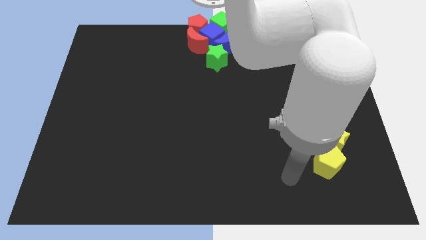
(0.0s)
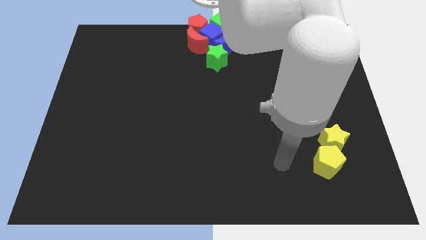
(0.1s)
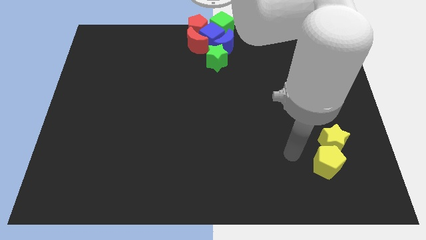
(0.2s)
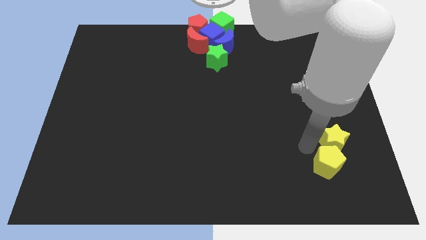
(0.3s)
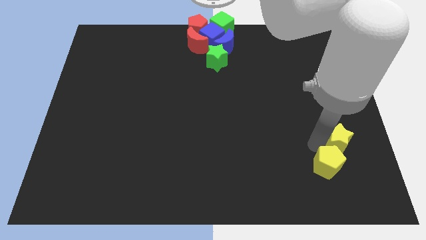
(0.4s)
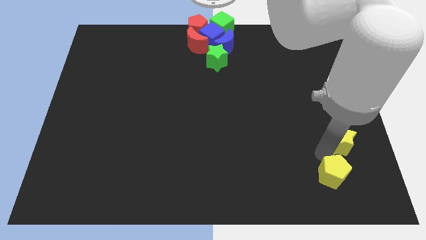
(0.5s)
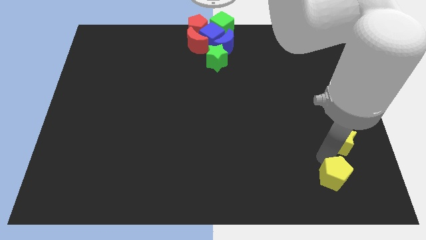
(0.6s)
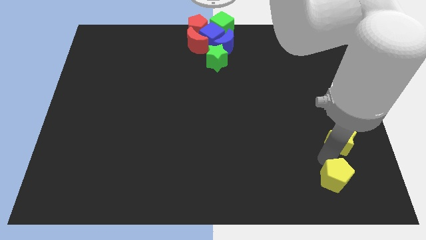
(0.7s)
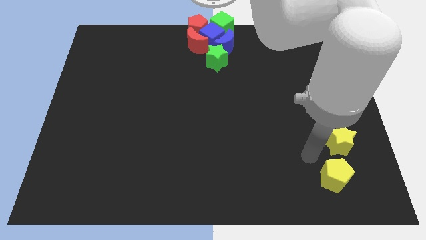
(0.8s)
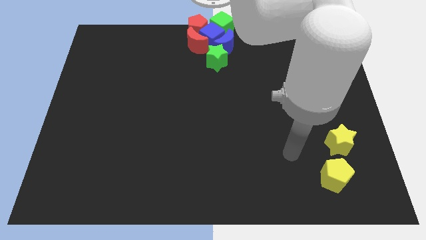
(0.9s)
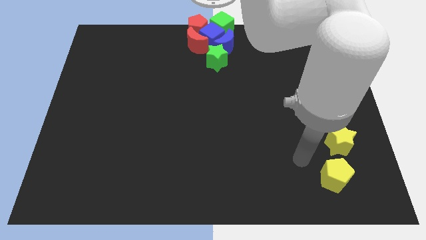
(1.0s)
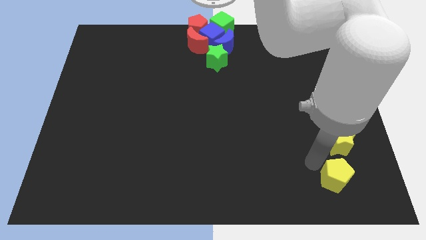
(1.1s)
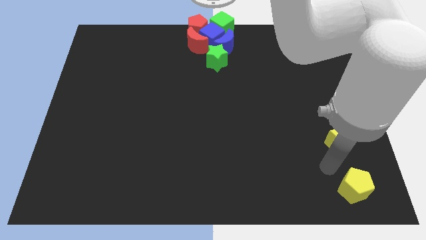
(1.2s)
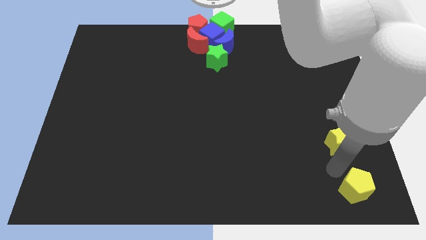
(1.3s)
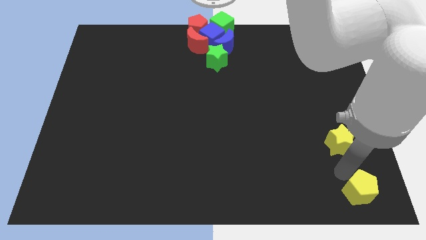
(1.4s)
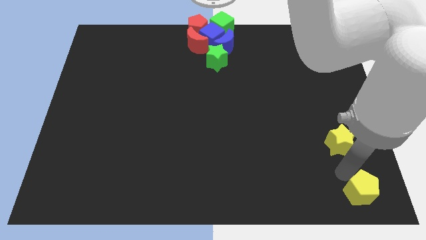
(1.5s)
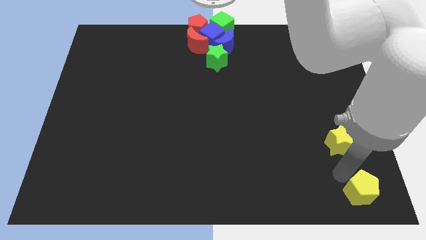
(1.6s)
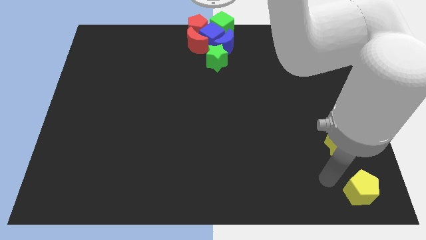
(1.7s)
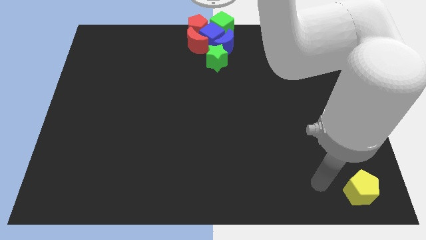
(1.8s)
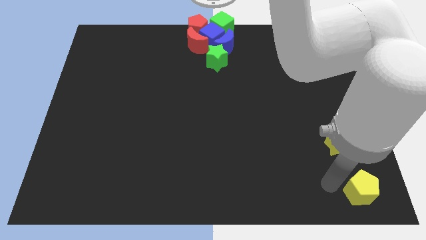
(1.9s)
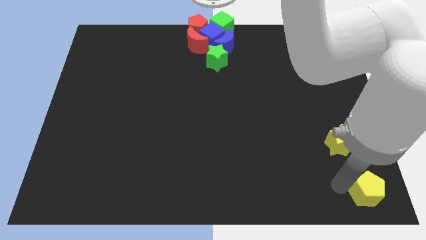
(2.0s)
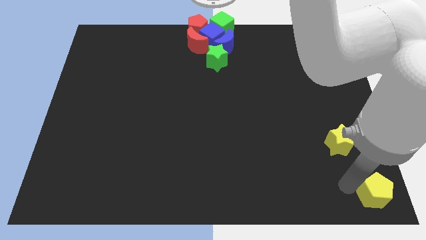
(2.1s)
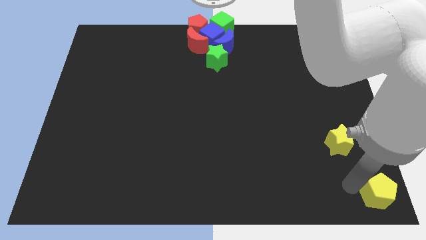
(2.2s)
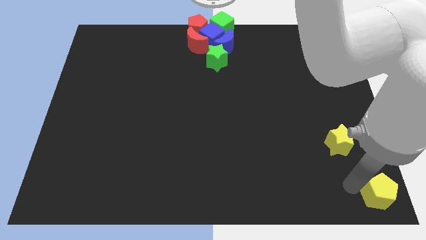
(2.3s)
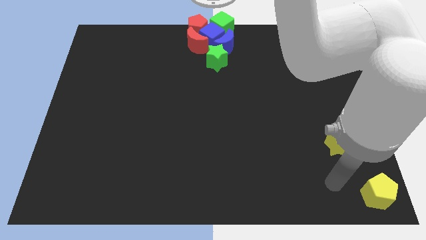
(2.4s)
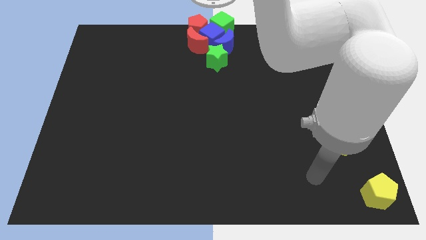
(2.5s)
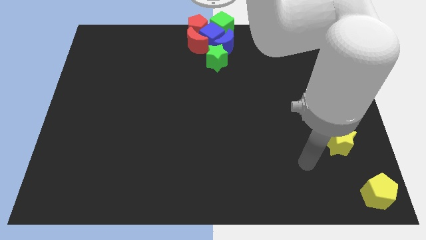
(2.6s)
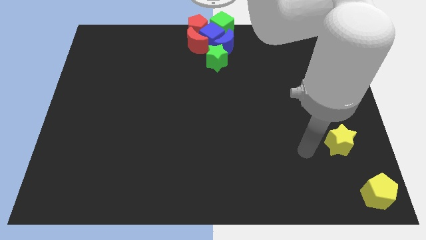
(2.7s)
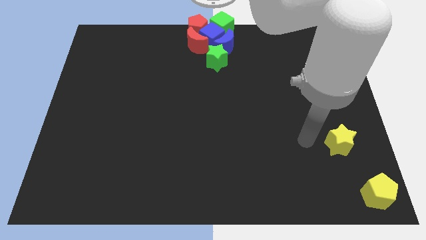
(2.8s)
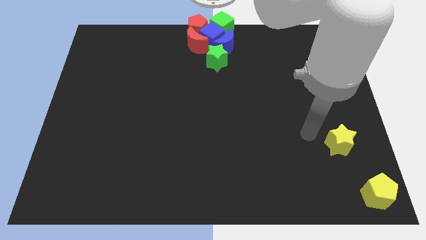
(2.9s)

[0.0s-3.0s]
separate the yellow pentagon away from the yellow star

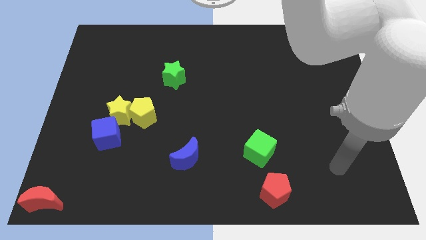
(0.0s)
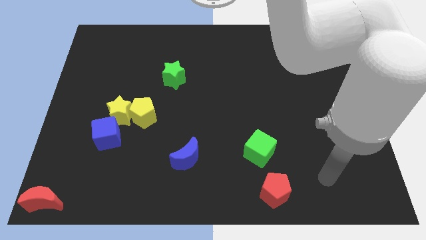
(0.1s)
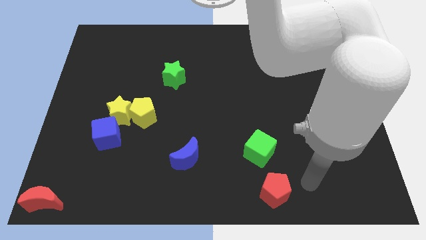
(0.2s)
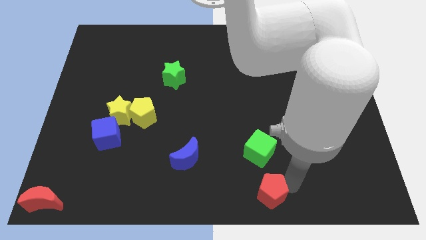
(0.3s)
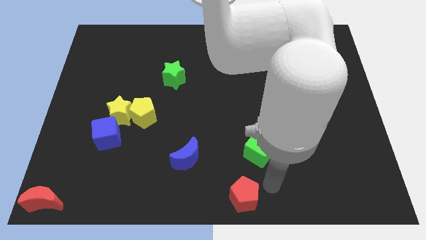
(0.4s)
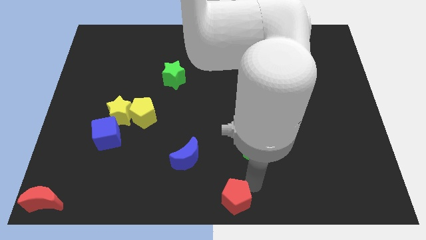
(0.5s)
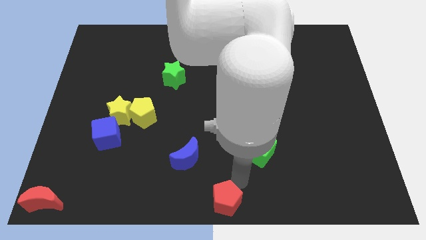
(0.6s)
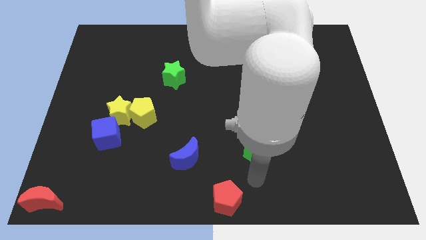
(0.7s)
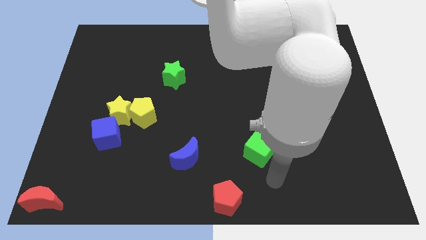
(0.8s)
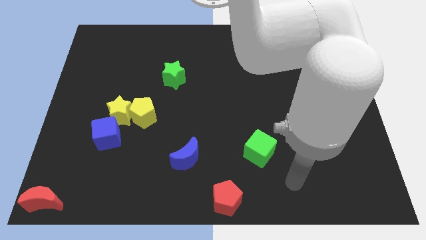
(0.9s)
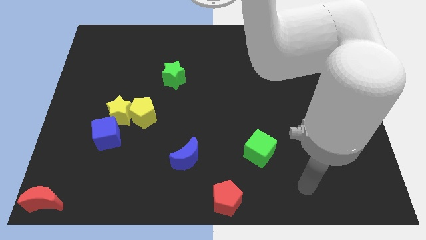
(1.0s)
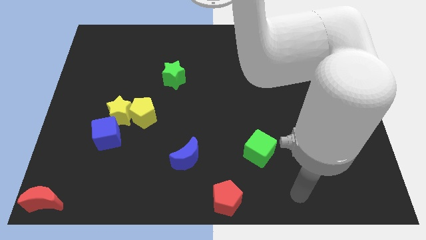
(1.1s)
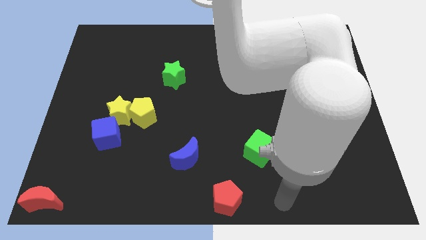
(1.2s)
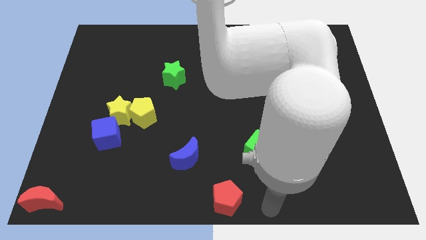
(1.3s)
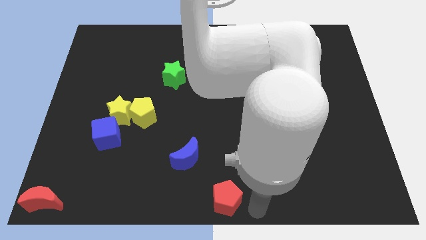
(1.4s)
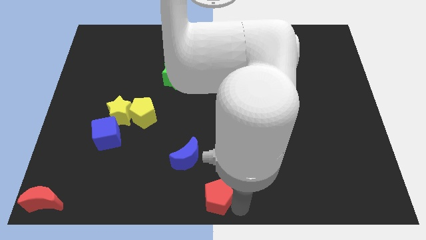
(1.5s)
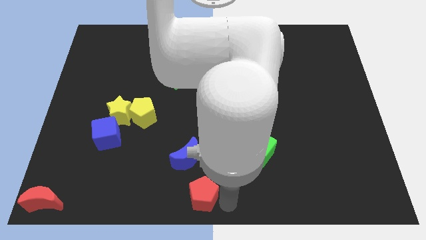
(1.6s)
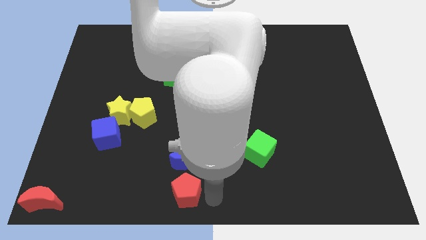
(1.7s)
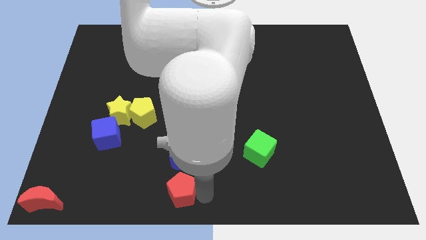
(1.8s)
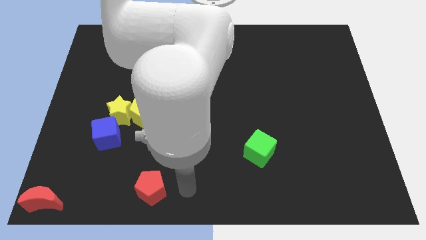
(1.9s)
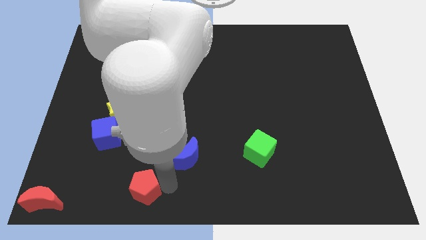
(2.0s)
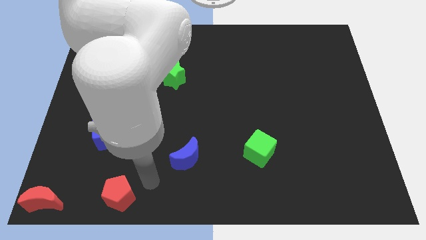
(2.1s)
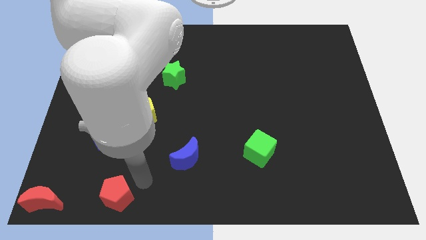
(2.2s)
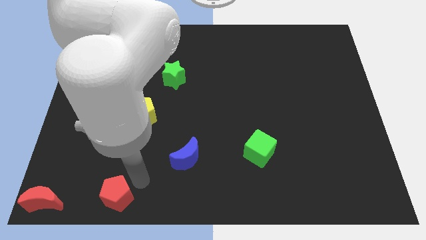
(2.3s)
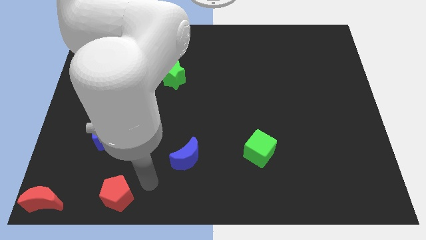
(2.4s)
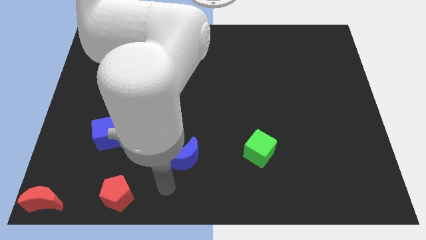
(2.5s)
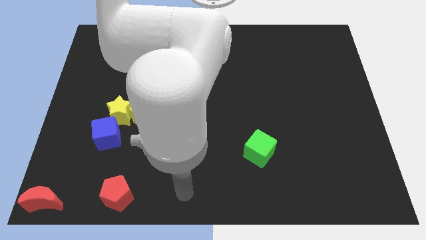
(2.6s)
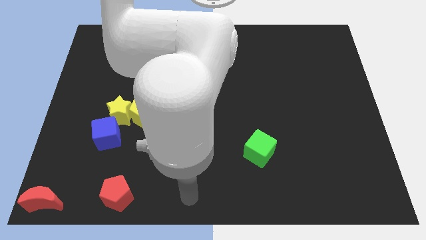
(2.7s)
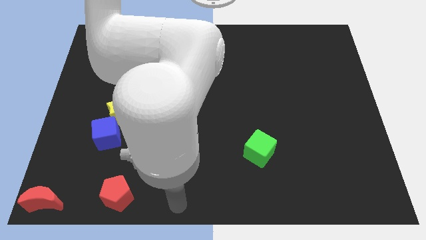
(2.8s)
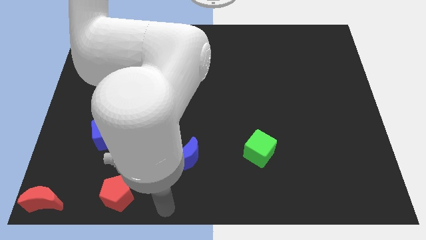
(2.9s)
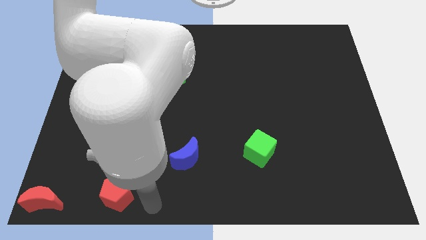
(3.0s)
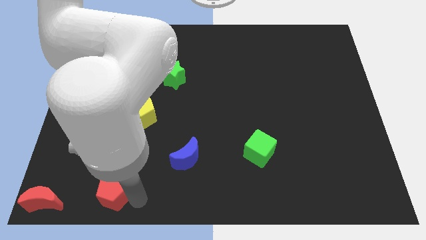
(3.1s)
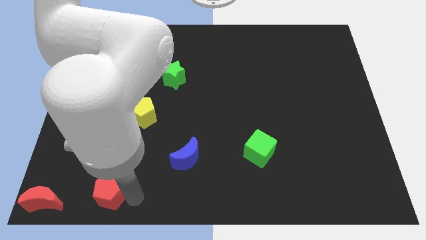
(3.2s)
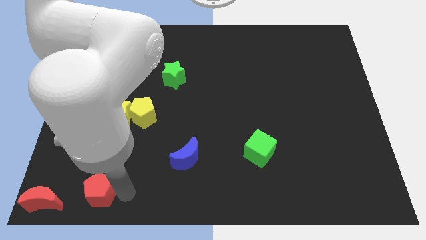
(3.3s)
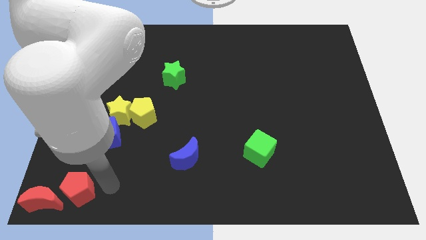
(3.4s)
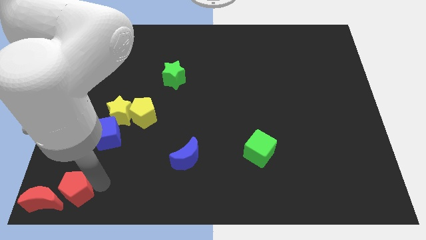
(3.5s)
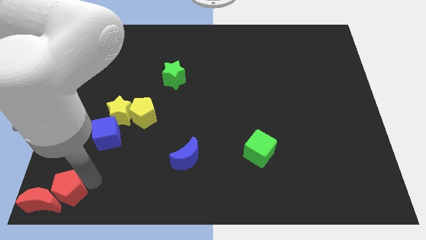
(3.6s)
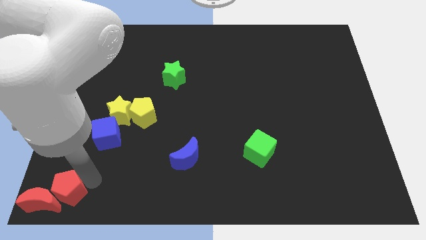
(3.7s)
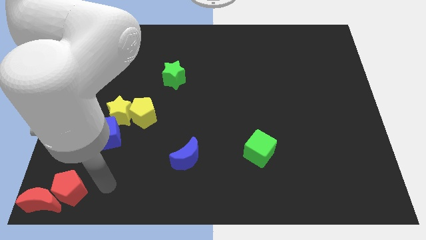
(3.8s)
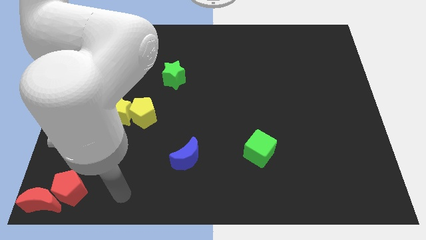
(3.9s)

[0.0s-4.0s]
push the red pentagon into the red moon

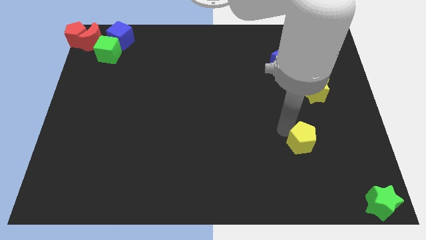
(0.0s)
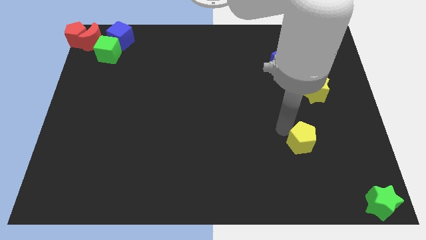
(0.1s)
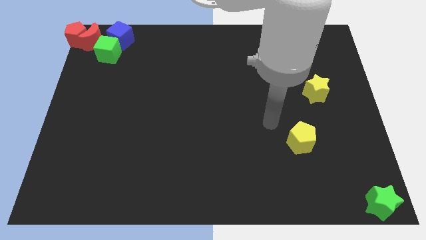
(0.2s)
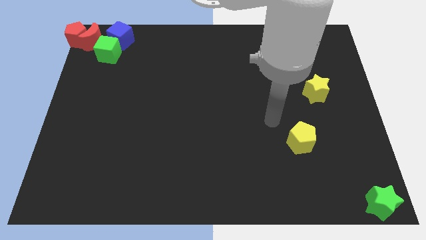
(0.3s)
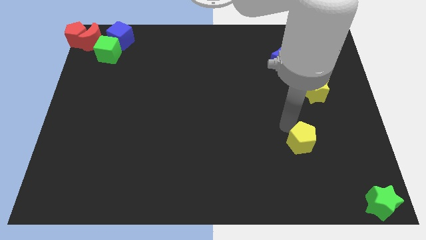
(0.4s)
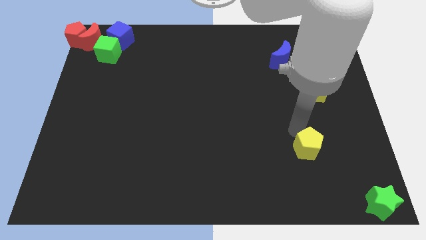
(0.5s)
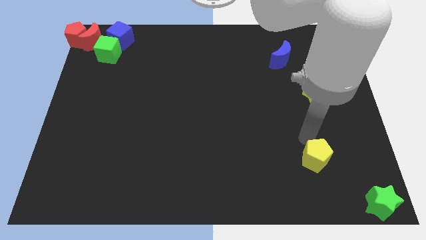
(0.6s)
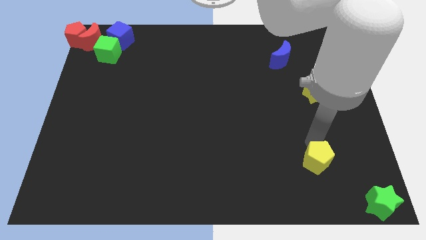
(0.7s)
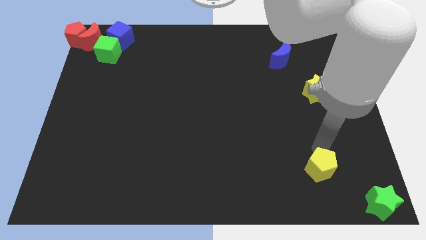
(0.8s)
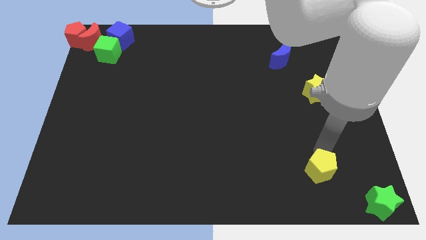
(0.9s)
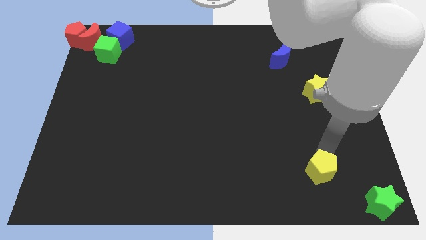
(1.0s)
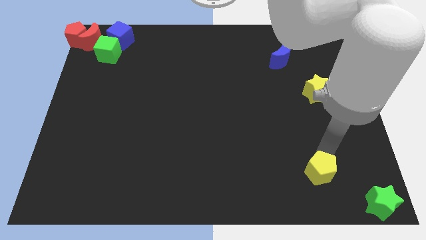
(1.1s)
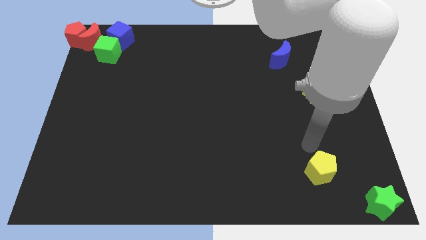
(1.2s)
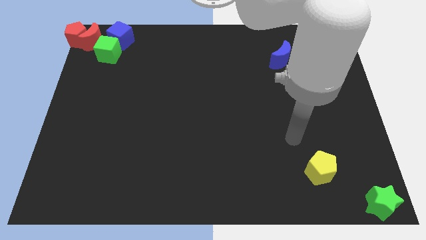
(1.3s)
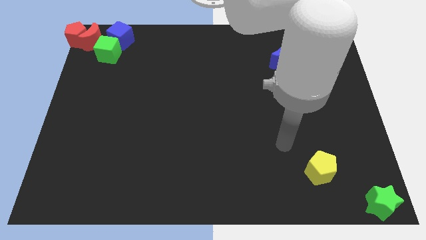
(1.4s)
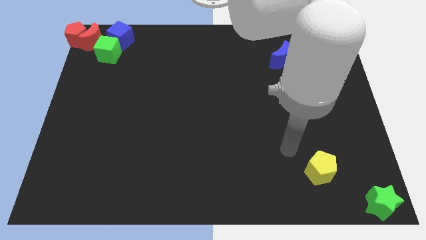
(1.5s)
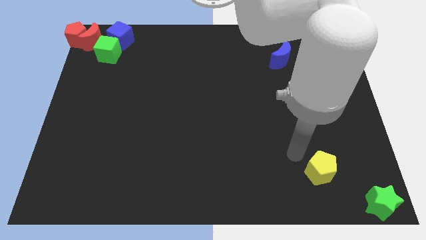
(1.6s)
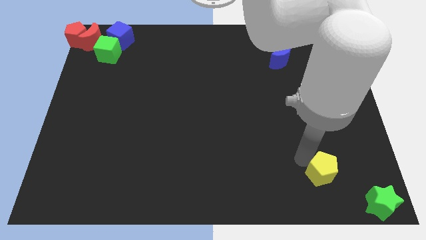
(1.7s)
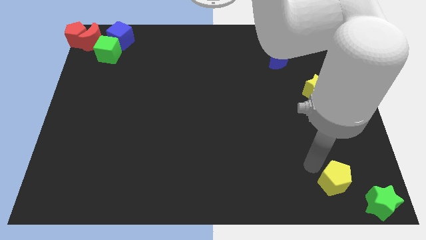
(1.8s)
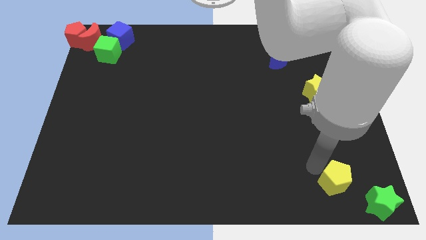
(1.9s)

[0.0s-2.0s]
slide the yellow pentagon vertically below the yellow star

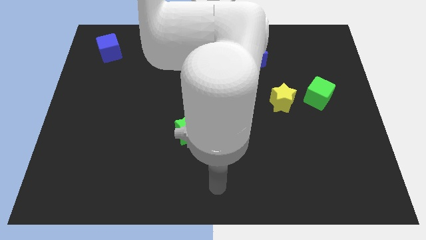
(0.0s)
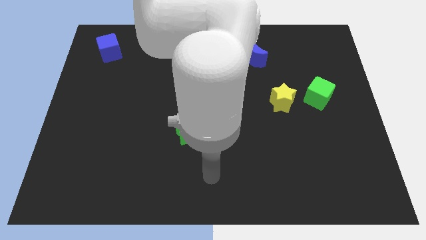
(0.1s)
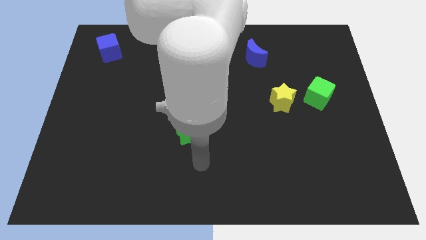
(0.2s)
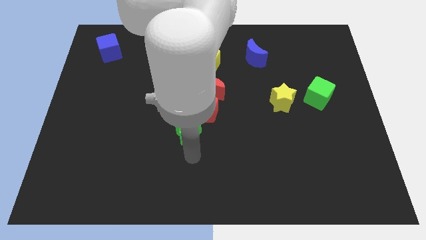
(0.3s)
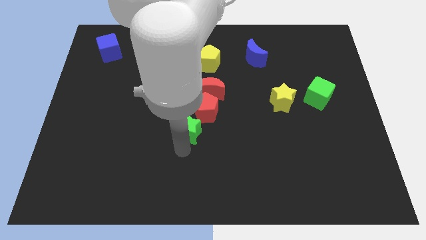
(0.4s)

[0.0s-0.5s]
place the arm down to the green star
